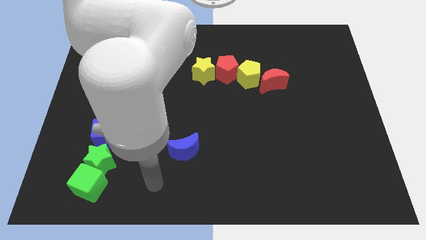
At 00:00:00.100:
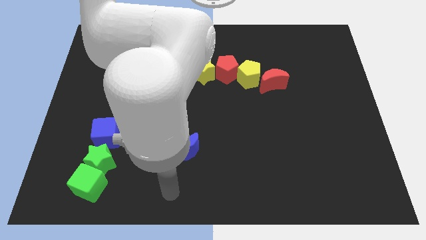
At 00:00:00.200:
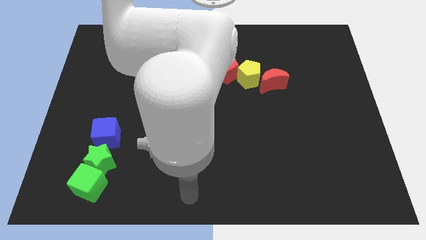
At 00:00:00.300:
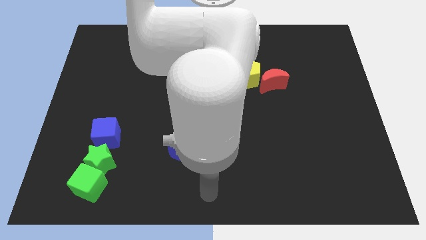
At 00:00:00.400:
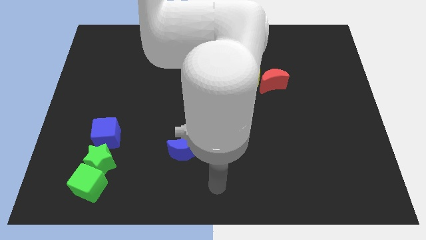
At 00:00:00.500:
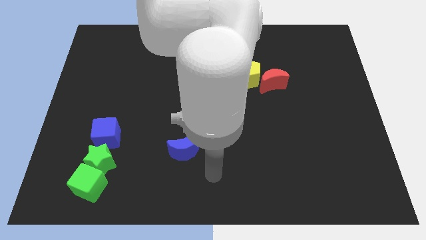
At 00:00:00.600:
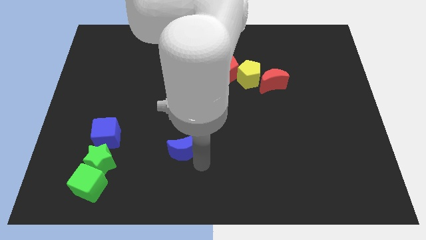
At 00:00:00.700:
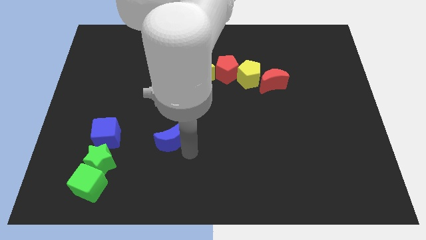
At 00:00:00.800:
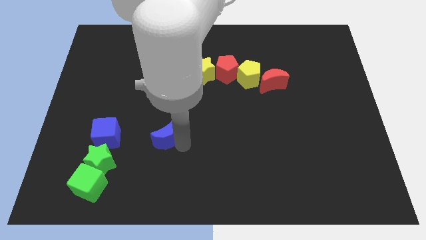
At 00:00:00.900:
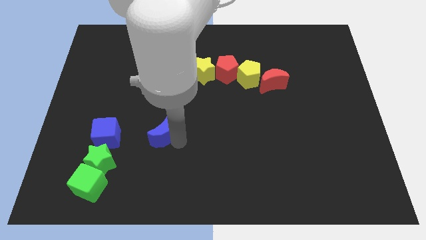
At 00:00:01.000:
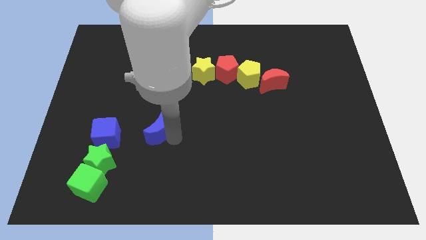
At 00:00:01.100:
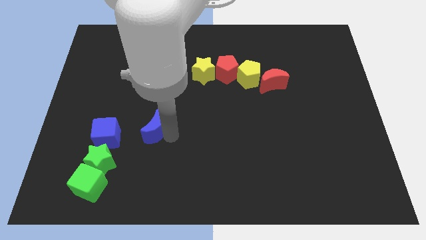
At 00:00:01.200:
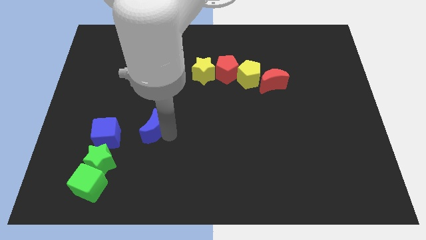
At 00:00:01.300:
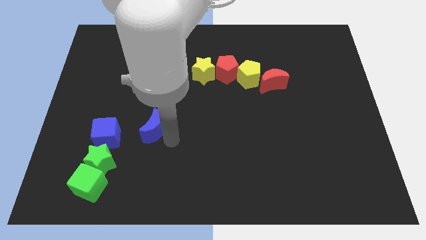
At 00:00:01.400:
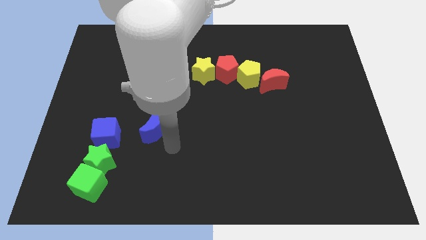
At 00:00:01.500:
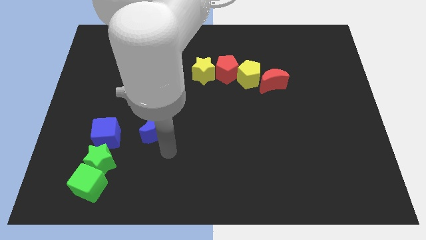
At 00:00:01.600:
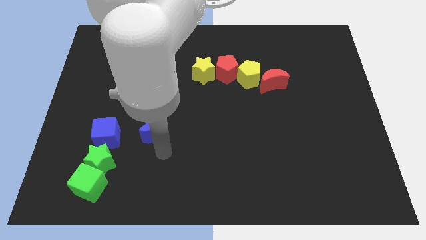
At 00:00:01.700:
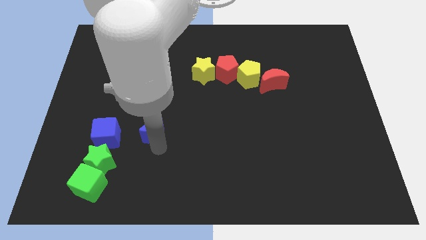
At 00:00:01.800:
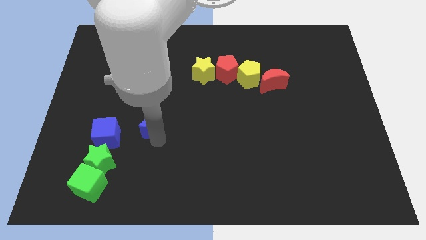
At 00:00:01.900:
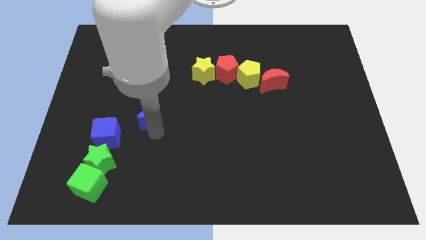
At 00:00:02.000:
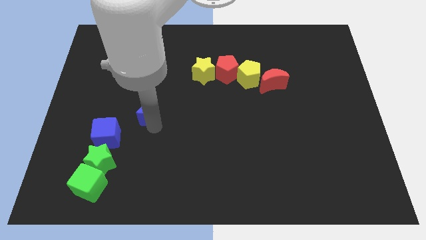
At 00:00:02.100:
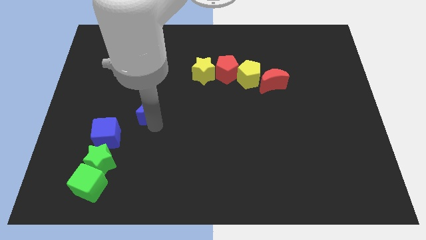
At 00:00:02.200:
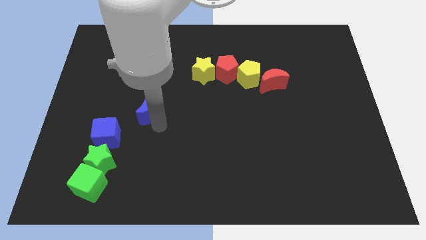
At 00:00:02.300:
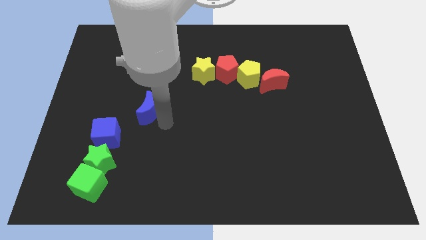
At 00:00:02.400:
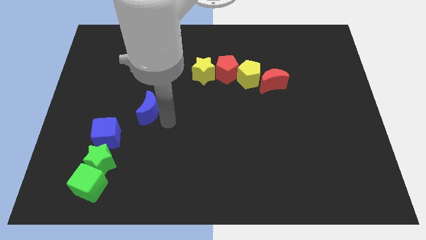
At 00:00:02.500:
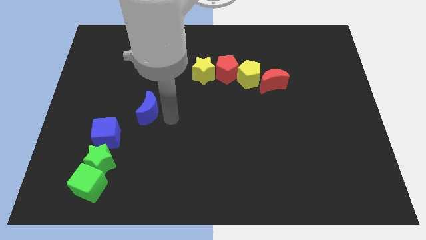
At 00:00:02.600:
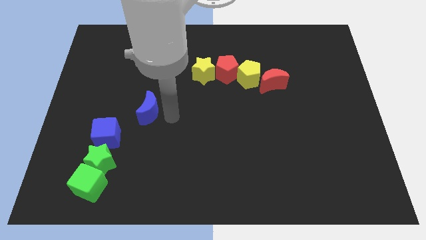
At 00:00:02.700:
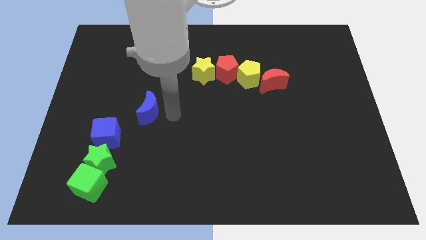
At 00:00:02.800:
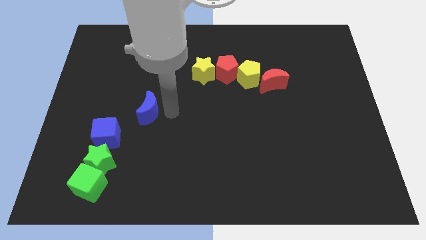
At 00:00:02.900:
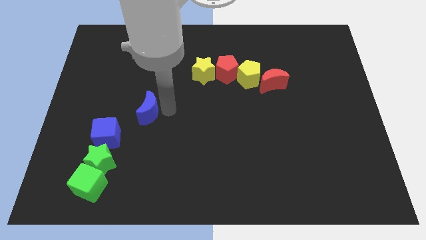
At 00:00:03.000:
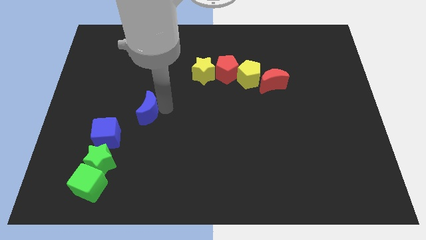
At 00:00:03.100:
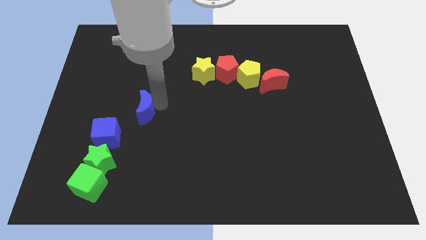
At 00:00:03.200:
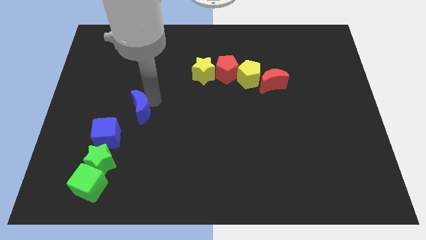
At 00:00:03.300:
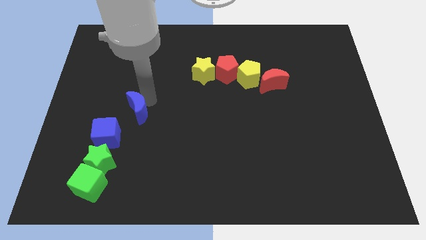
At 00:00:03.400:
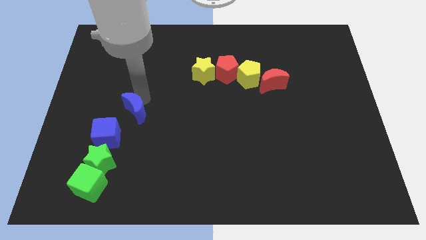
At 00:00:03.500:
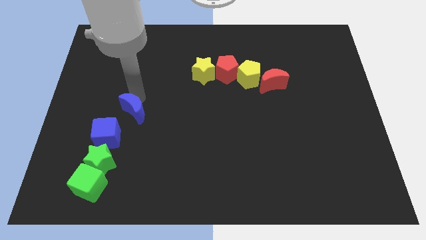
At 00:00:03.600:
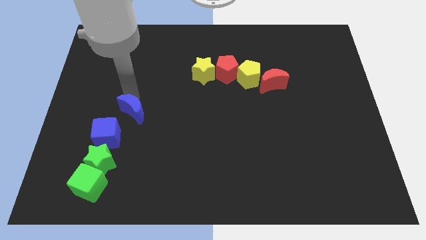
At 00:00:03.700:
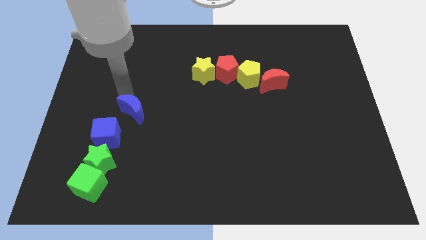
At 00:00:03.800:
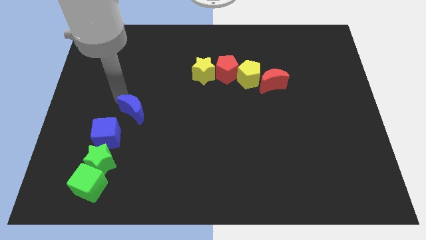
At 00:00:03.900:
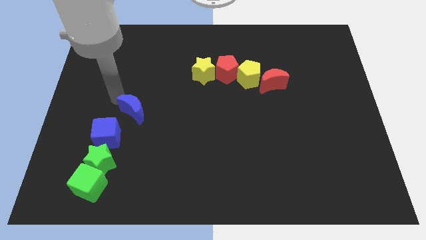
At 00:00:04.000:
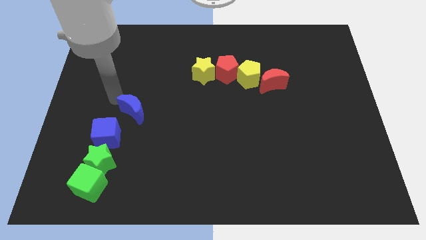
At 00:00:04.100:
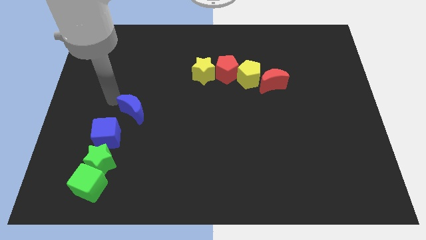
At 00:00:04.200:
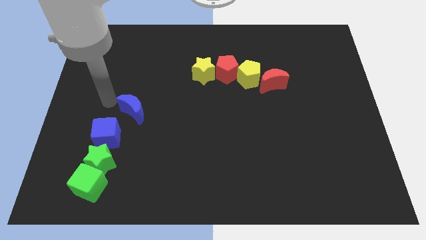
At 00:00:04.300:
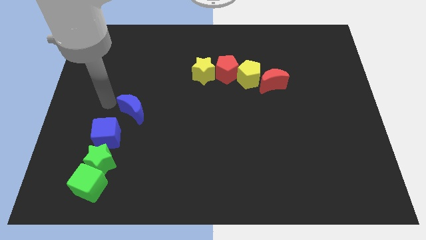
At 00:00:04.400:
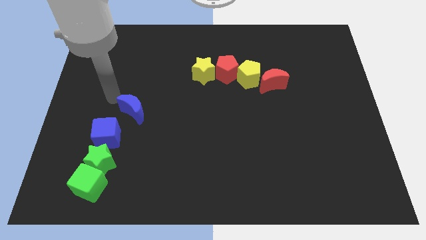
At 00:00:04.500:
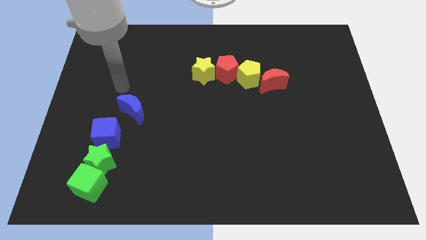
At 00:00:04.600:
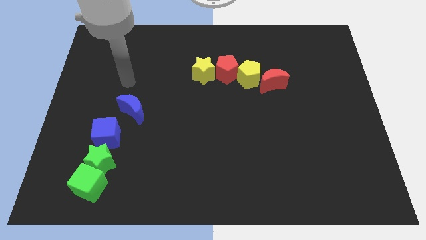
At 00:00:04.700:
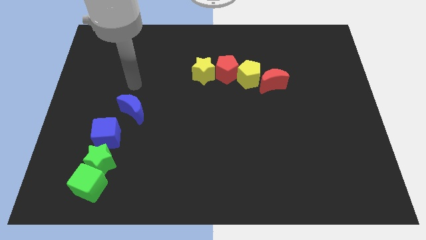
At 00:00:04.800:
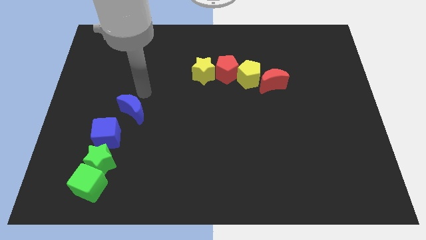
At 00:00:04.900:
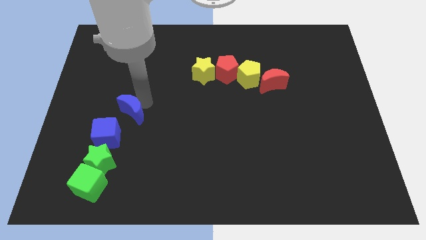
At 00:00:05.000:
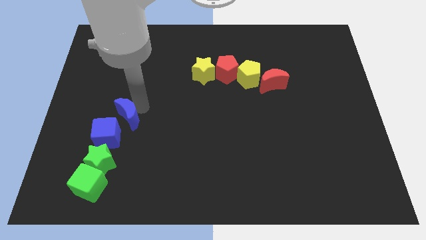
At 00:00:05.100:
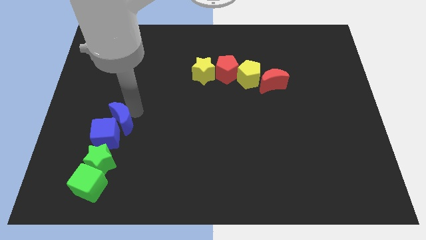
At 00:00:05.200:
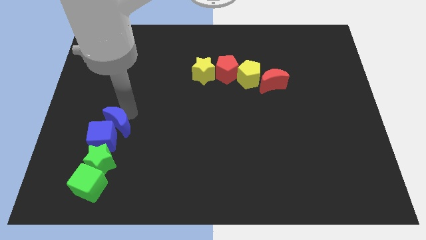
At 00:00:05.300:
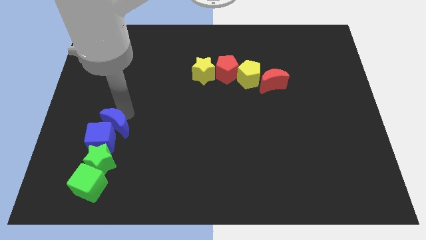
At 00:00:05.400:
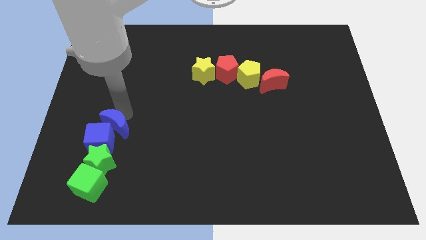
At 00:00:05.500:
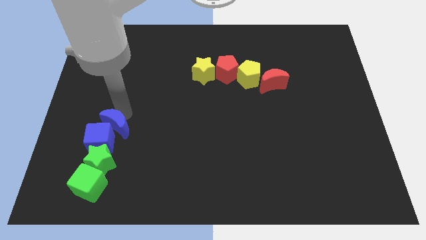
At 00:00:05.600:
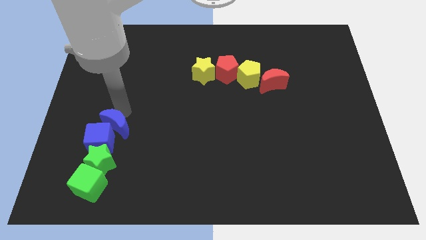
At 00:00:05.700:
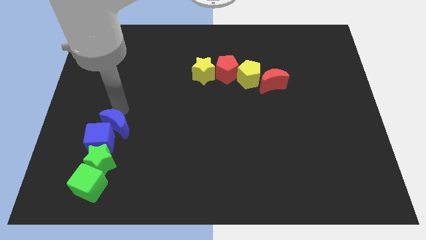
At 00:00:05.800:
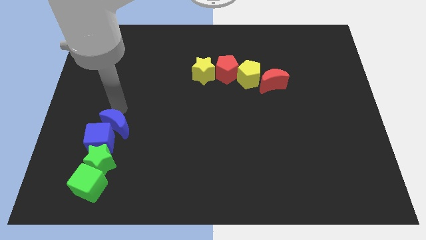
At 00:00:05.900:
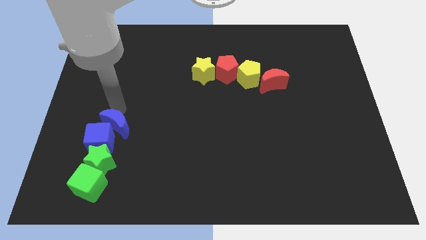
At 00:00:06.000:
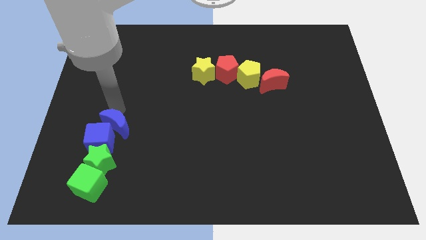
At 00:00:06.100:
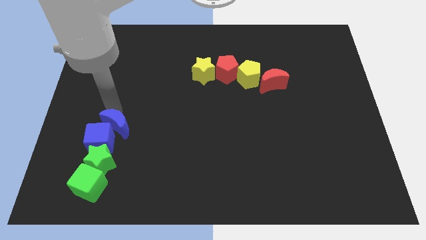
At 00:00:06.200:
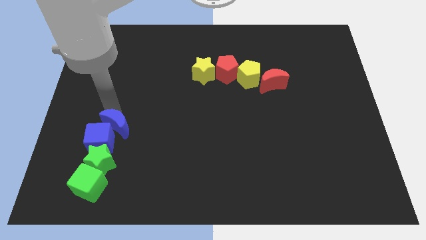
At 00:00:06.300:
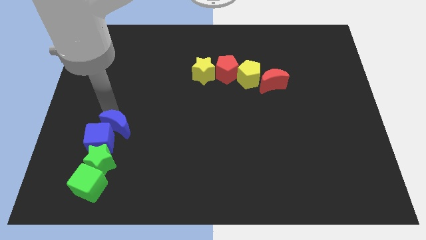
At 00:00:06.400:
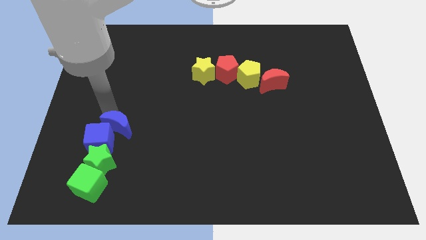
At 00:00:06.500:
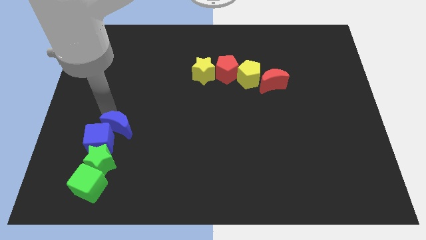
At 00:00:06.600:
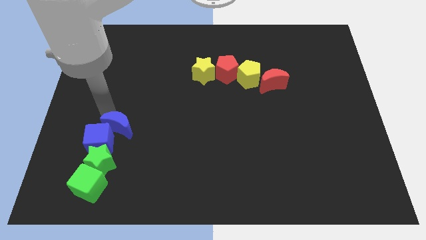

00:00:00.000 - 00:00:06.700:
drag the blue crescent to the blue cube

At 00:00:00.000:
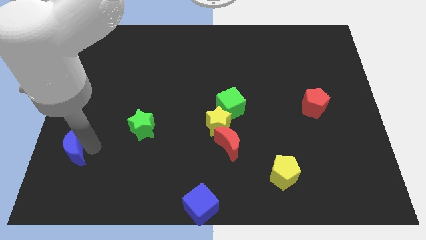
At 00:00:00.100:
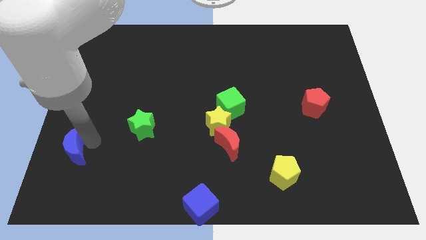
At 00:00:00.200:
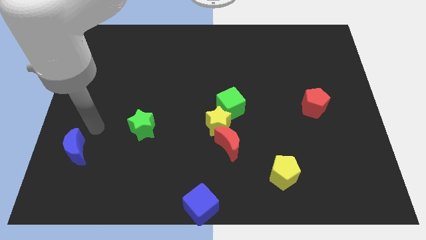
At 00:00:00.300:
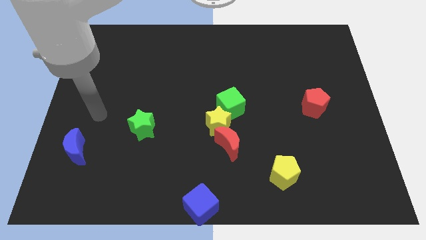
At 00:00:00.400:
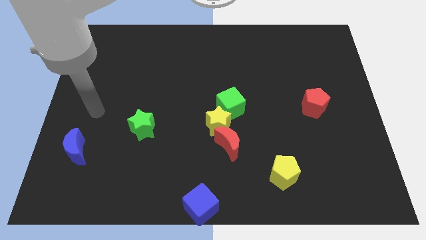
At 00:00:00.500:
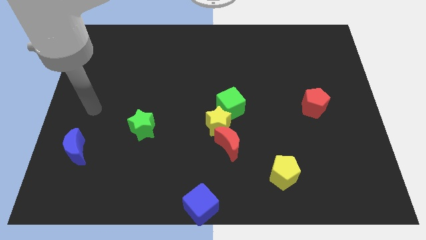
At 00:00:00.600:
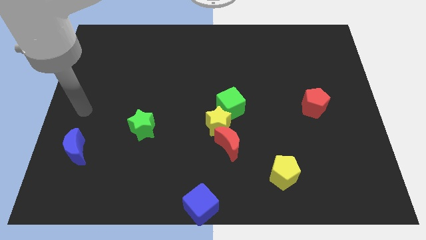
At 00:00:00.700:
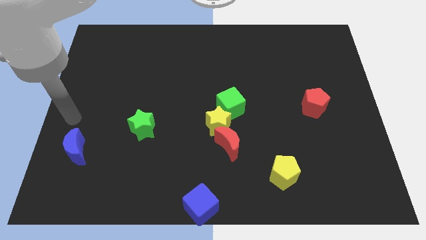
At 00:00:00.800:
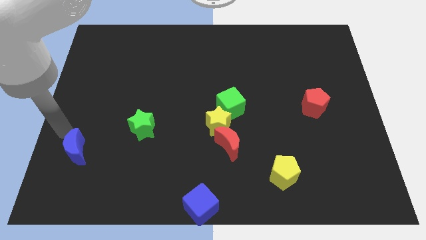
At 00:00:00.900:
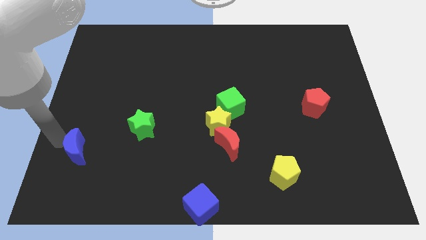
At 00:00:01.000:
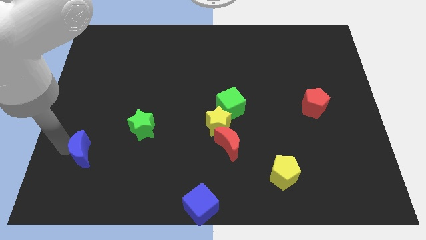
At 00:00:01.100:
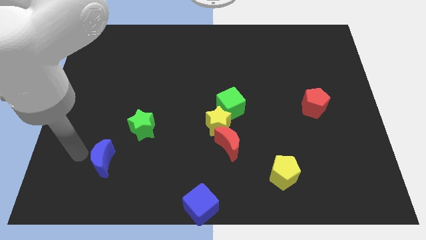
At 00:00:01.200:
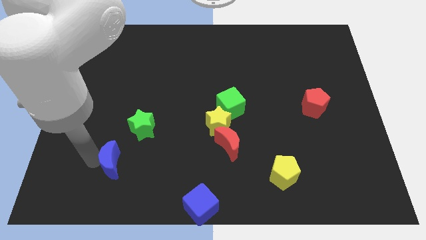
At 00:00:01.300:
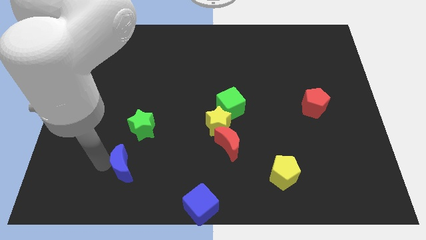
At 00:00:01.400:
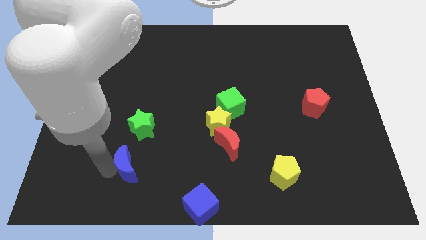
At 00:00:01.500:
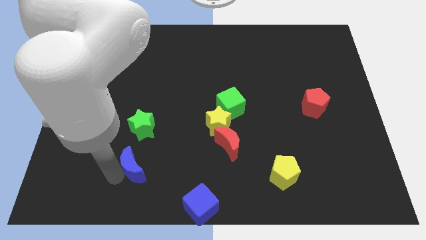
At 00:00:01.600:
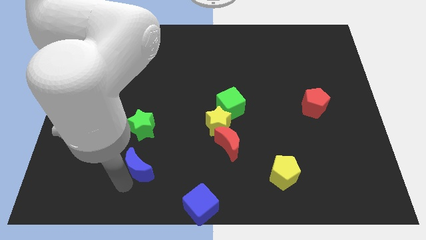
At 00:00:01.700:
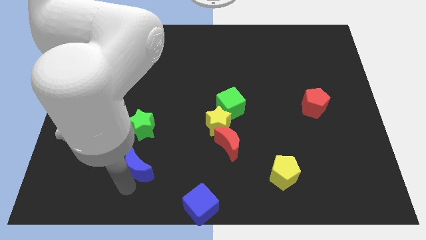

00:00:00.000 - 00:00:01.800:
push the blue crescent towards the red crescent

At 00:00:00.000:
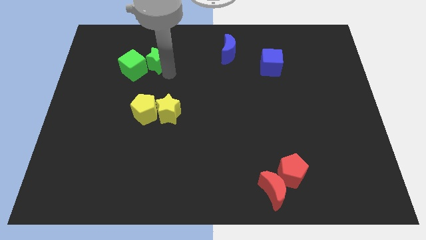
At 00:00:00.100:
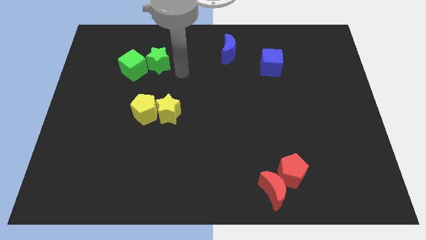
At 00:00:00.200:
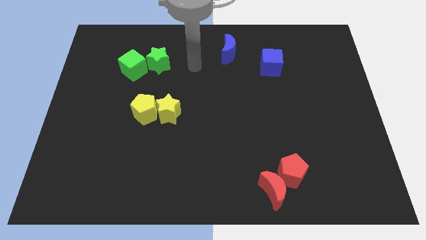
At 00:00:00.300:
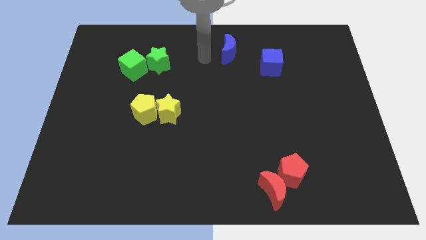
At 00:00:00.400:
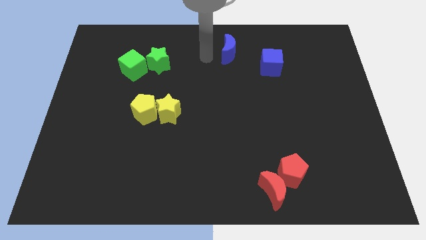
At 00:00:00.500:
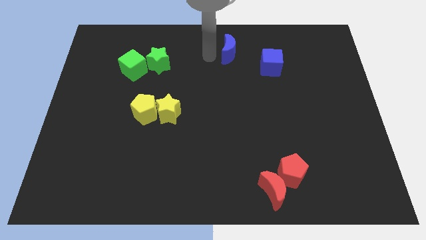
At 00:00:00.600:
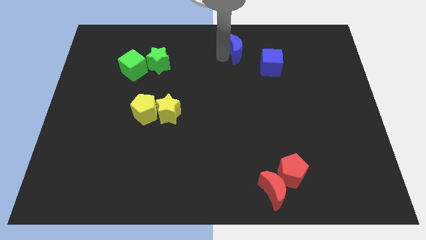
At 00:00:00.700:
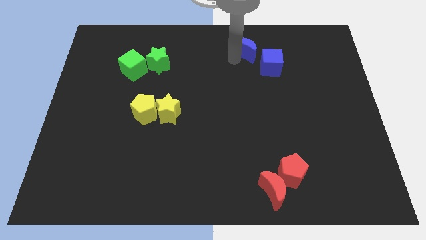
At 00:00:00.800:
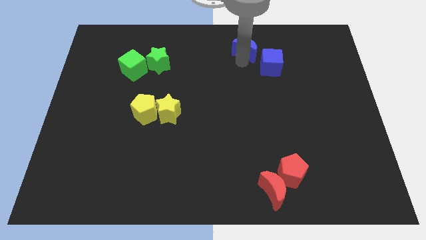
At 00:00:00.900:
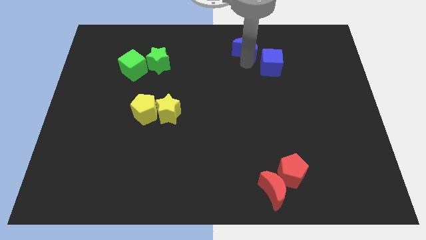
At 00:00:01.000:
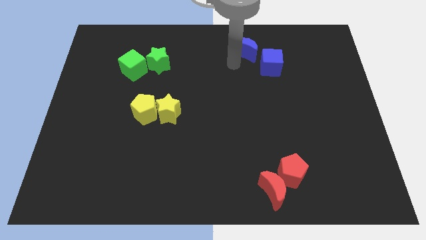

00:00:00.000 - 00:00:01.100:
push the blue moon towards the blue cube
